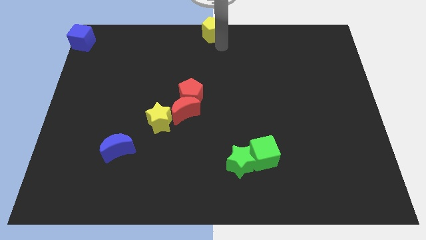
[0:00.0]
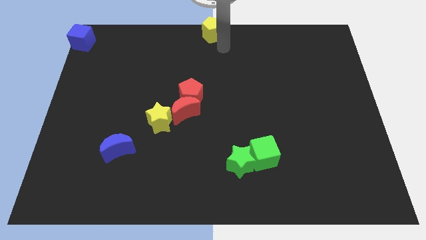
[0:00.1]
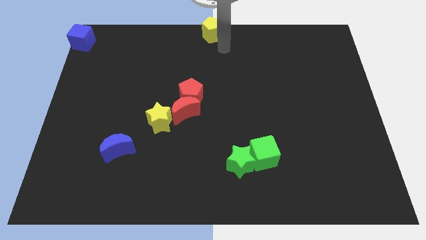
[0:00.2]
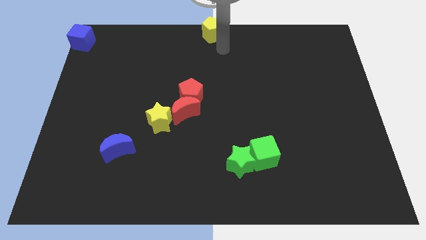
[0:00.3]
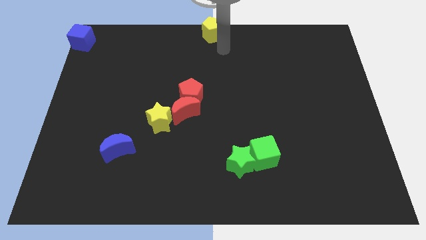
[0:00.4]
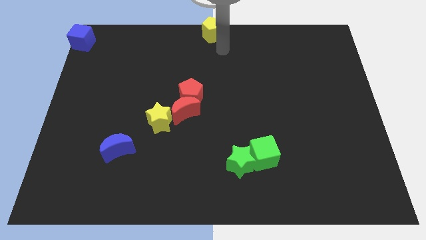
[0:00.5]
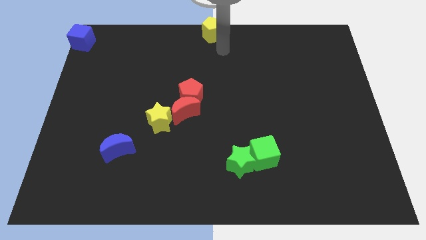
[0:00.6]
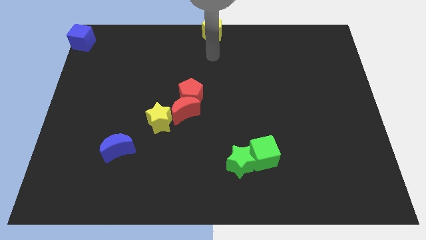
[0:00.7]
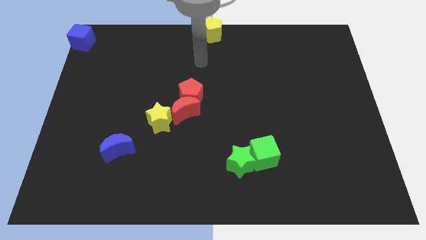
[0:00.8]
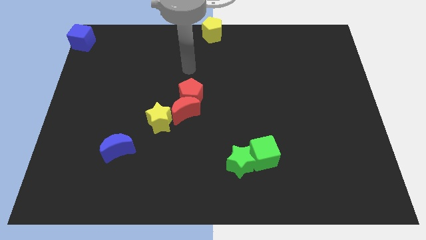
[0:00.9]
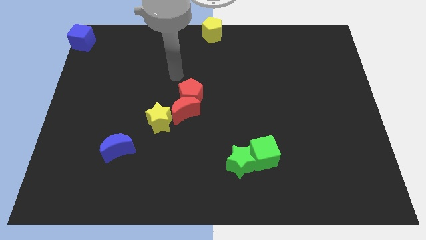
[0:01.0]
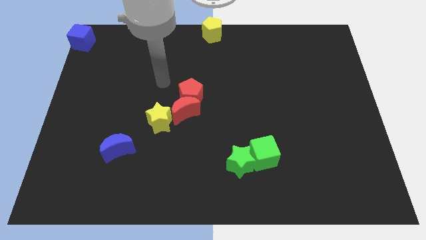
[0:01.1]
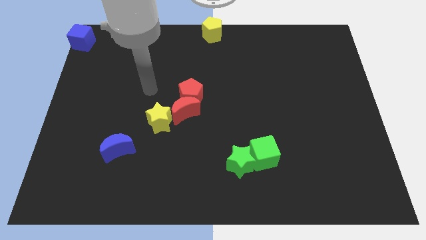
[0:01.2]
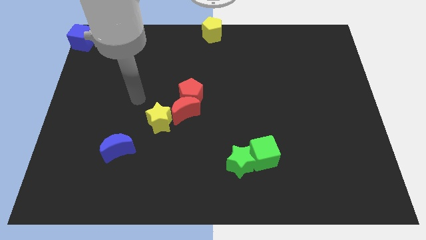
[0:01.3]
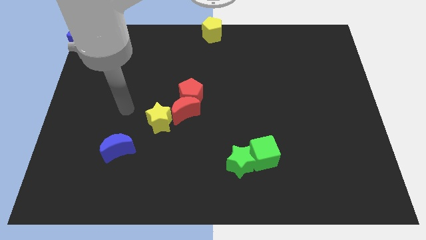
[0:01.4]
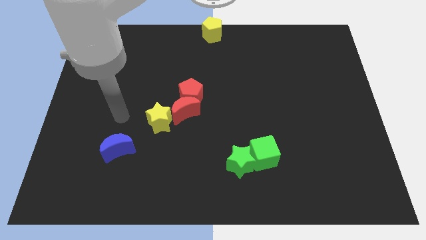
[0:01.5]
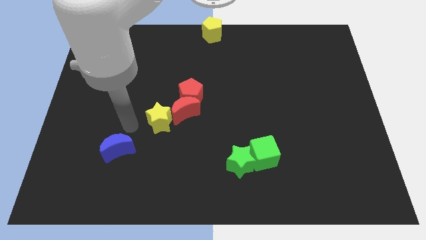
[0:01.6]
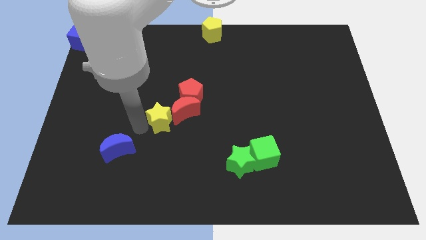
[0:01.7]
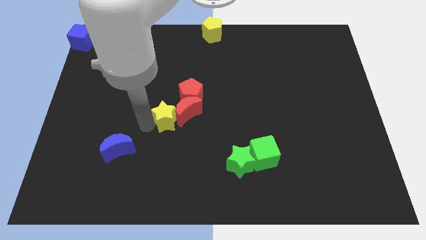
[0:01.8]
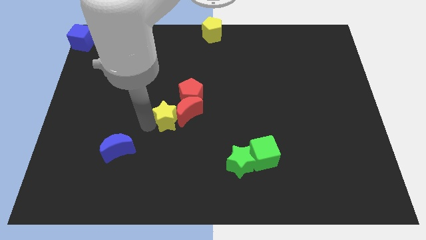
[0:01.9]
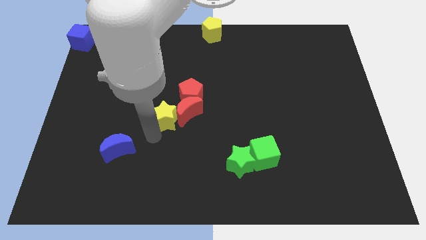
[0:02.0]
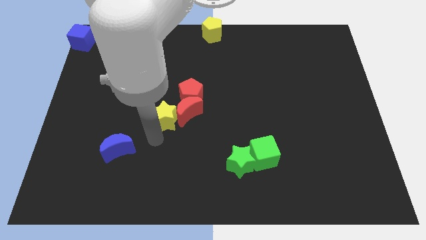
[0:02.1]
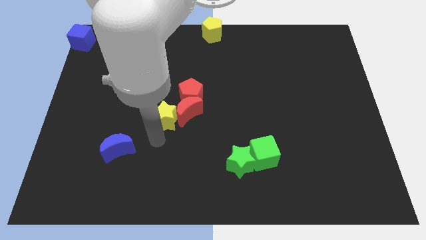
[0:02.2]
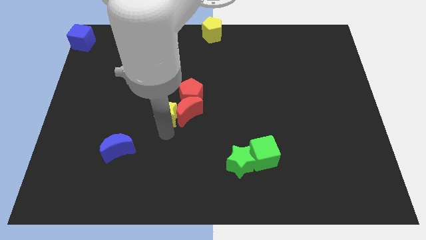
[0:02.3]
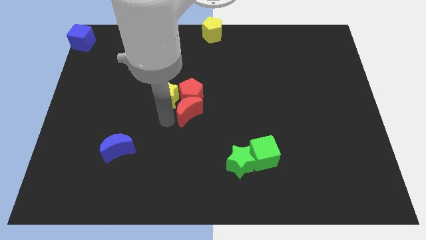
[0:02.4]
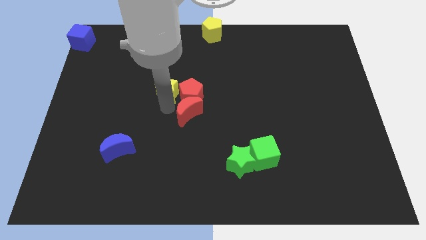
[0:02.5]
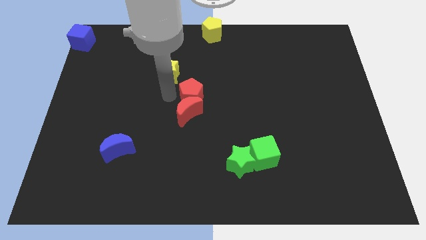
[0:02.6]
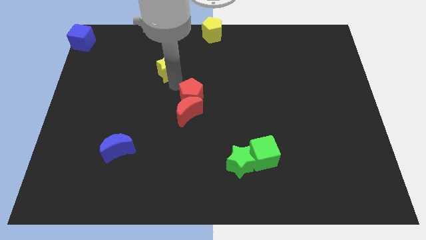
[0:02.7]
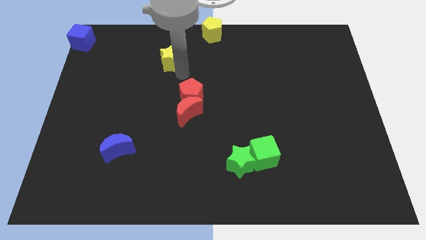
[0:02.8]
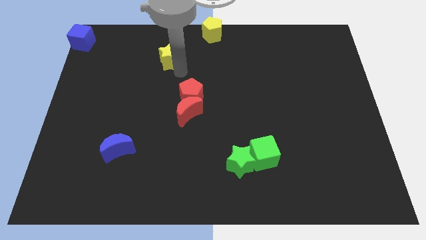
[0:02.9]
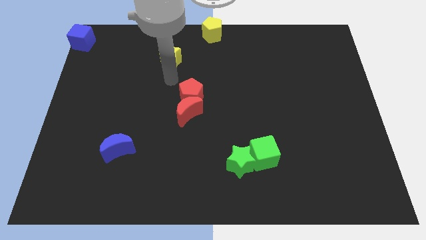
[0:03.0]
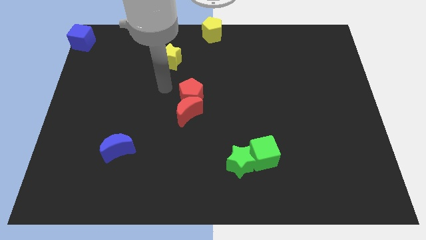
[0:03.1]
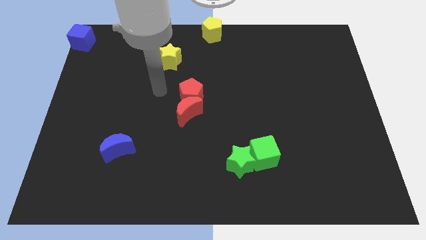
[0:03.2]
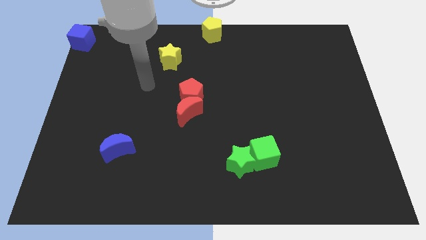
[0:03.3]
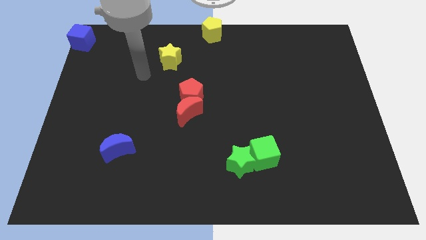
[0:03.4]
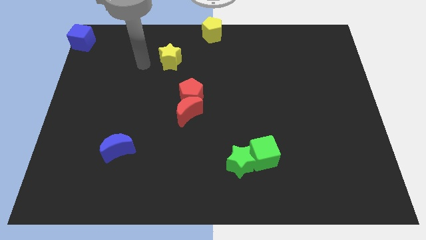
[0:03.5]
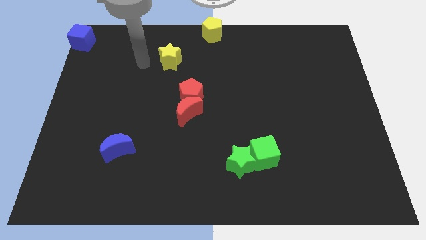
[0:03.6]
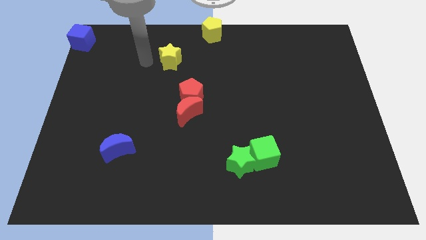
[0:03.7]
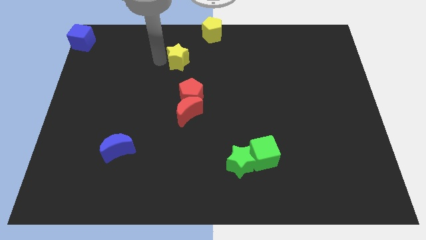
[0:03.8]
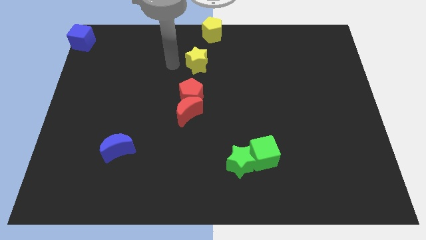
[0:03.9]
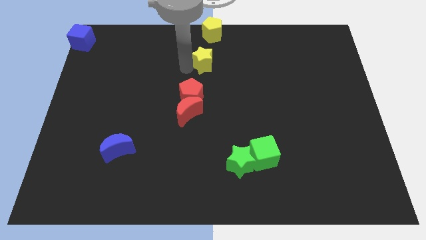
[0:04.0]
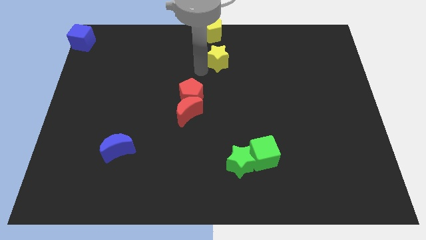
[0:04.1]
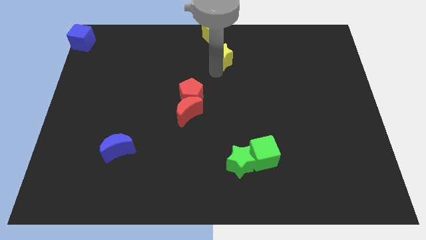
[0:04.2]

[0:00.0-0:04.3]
move the yellow star towards the bottom of yellow pentagon

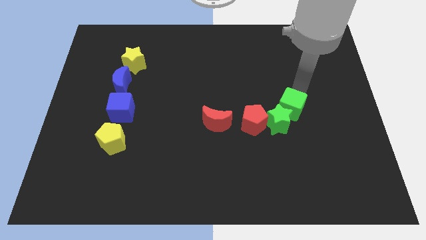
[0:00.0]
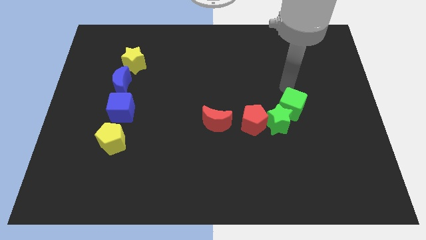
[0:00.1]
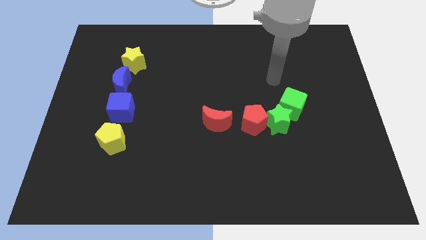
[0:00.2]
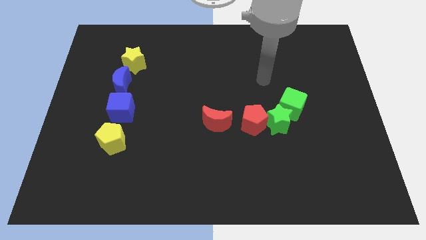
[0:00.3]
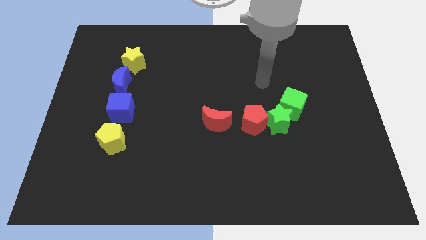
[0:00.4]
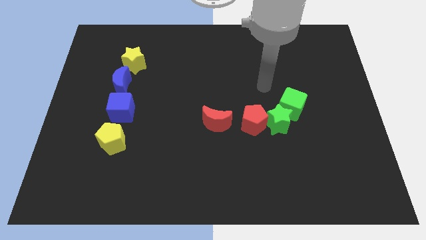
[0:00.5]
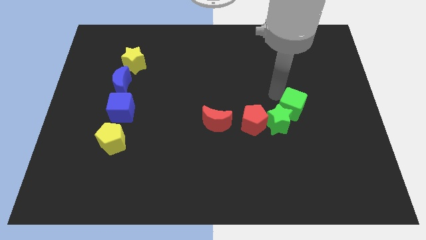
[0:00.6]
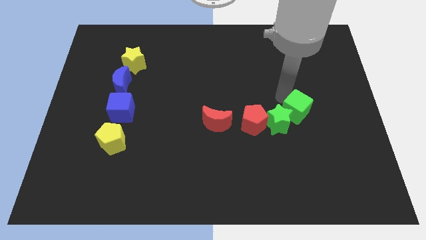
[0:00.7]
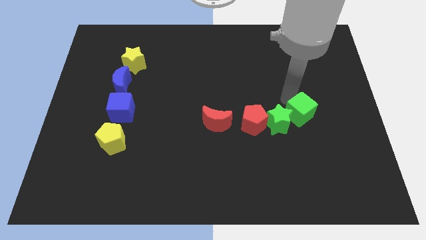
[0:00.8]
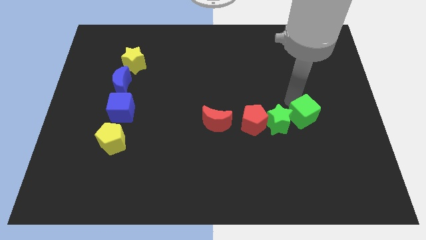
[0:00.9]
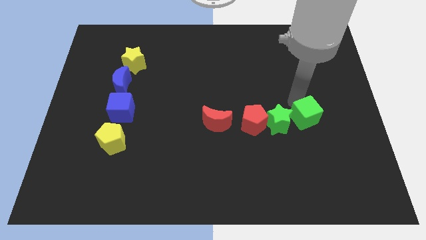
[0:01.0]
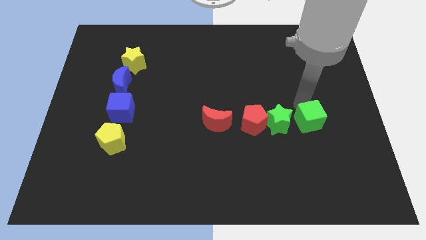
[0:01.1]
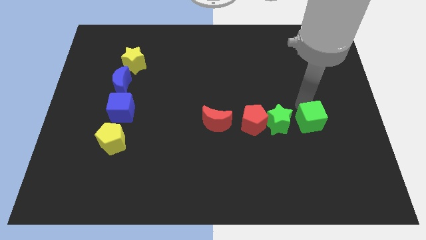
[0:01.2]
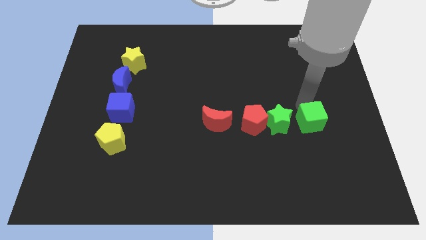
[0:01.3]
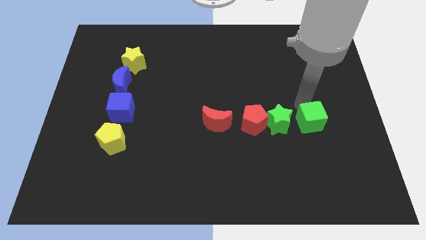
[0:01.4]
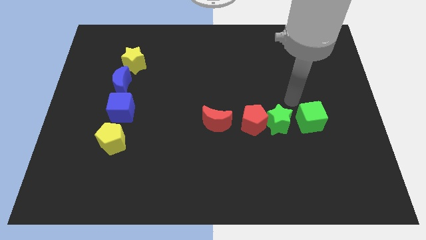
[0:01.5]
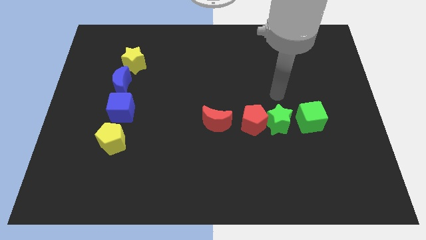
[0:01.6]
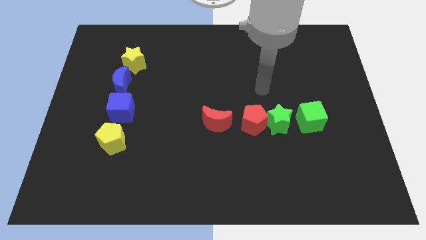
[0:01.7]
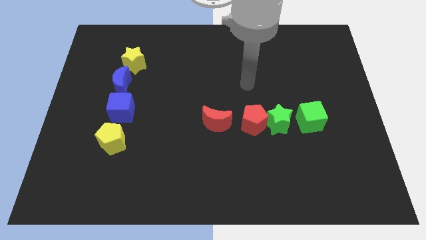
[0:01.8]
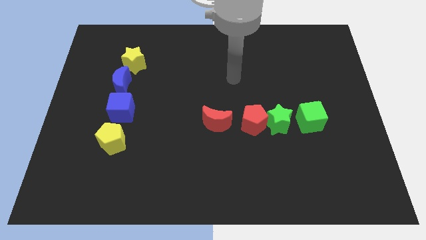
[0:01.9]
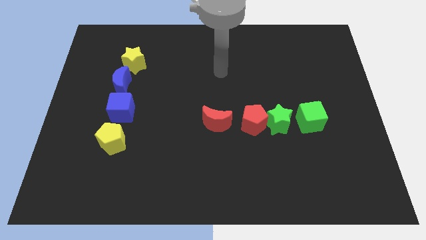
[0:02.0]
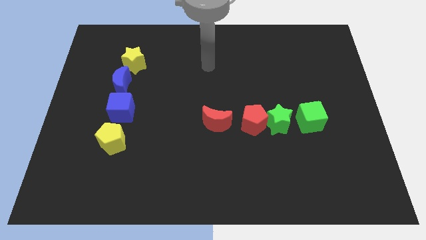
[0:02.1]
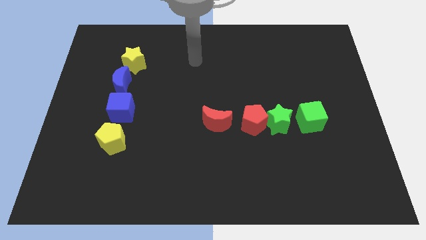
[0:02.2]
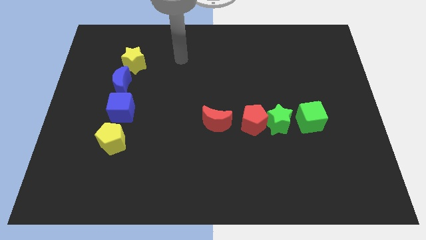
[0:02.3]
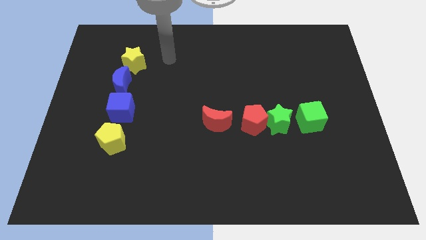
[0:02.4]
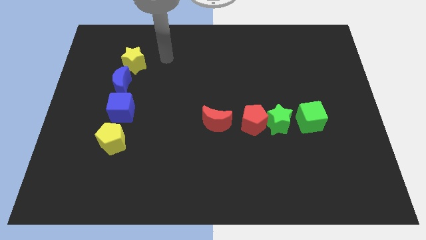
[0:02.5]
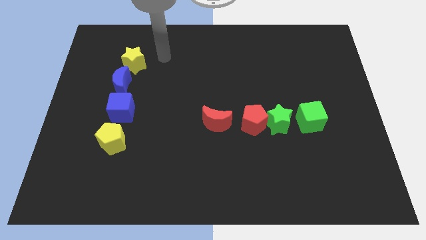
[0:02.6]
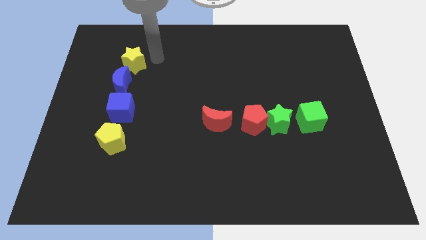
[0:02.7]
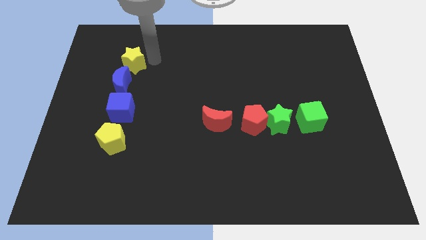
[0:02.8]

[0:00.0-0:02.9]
separate green cube from green star

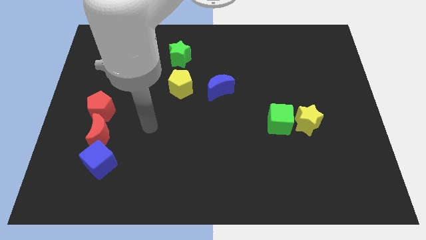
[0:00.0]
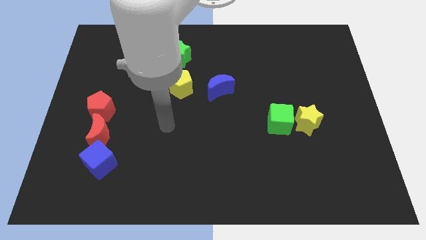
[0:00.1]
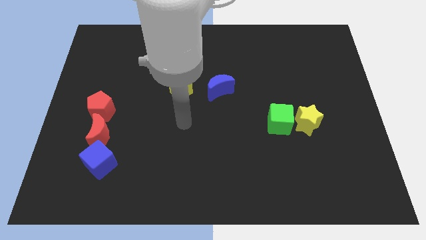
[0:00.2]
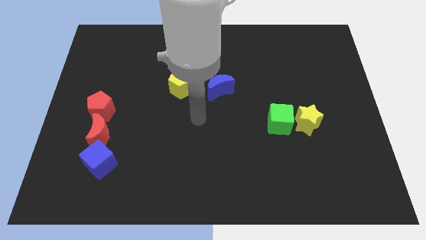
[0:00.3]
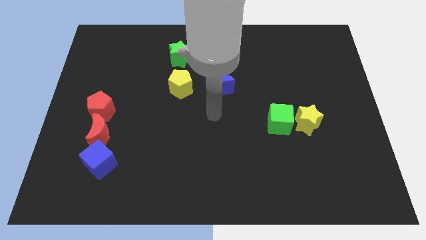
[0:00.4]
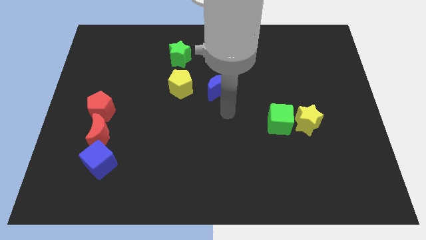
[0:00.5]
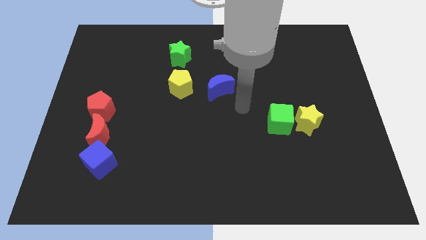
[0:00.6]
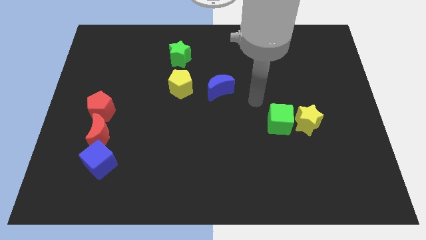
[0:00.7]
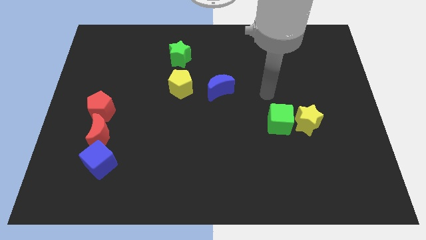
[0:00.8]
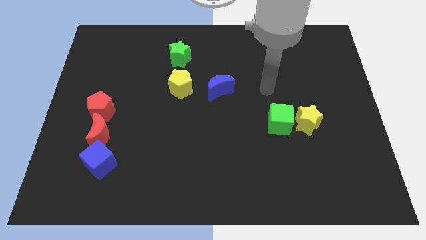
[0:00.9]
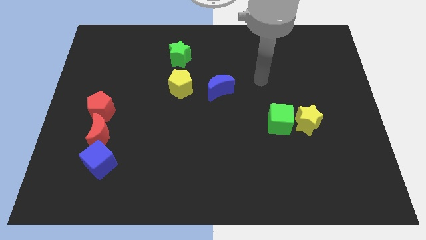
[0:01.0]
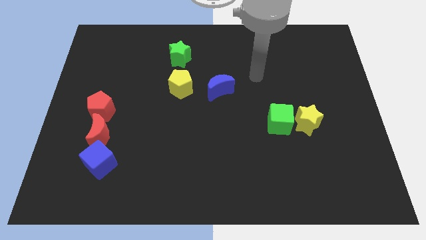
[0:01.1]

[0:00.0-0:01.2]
move the arm towards the blue crescent

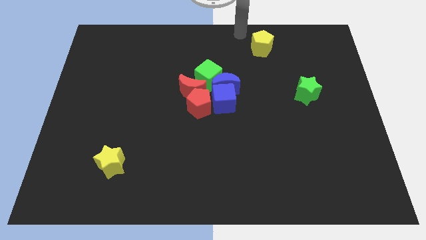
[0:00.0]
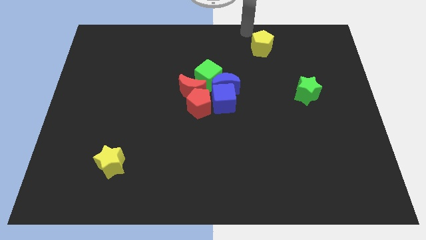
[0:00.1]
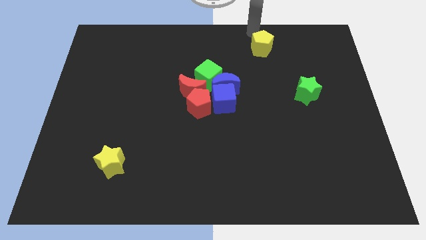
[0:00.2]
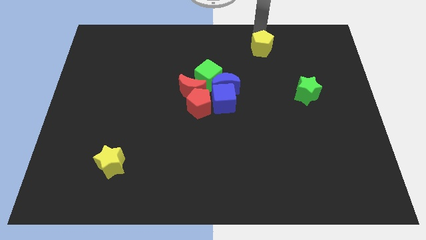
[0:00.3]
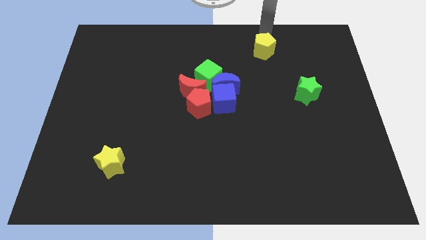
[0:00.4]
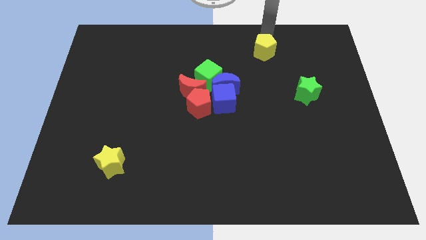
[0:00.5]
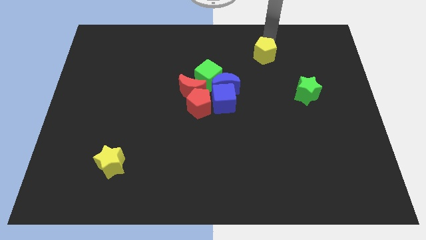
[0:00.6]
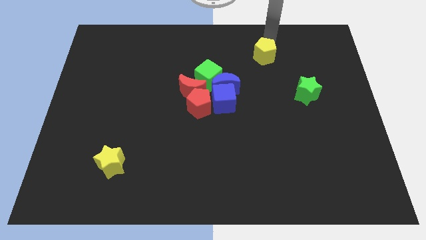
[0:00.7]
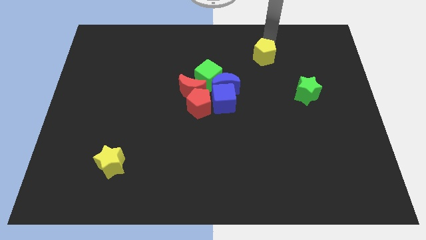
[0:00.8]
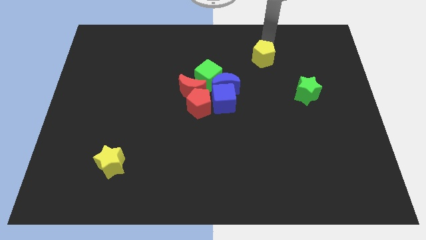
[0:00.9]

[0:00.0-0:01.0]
place your arm above yellow pentagon
